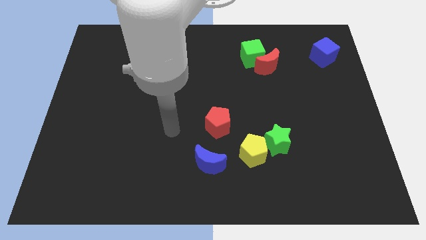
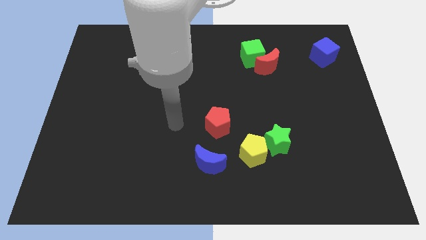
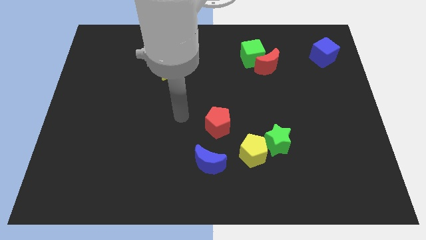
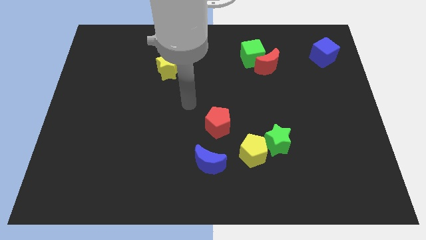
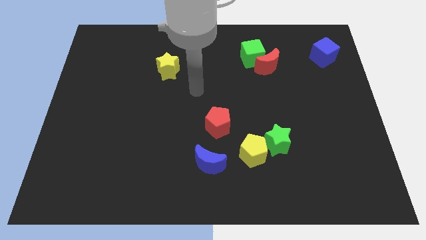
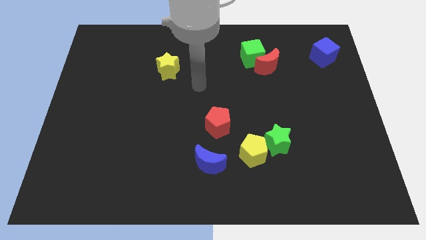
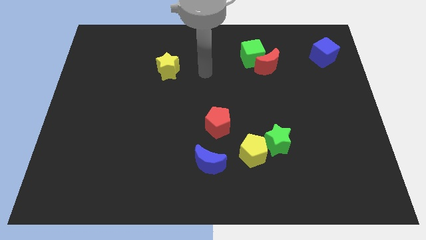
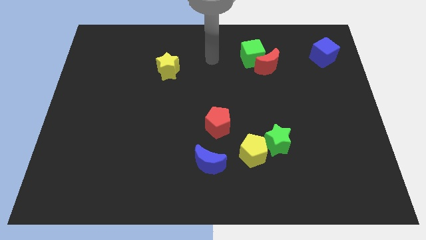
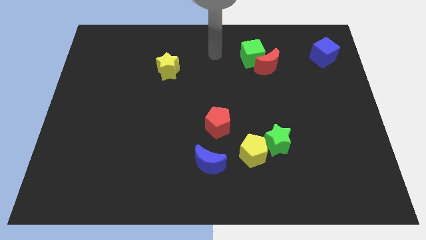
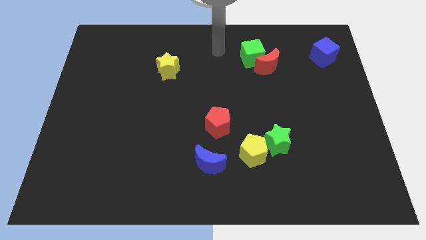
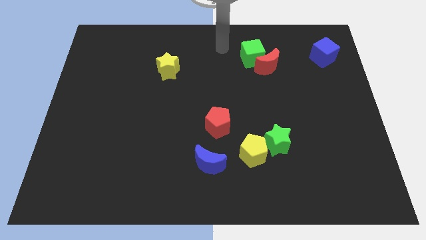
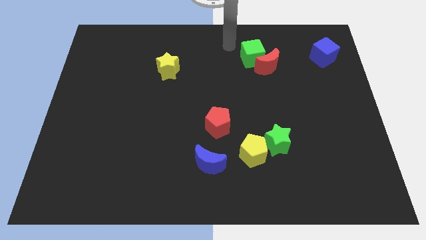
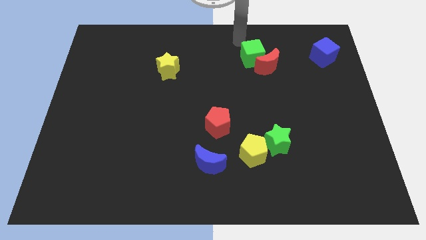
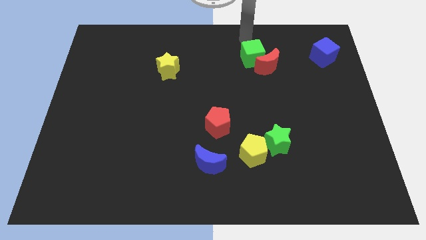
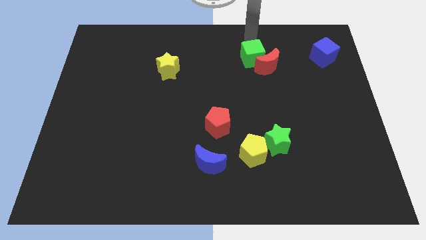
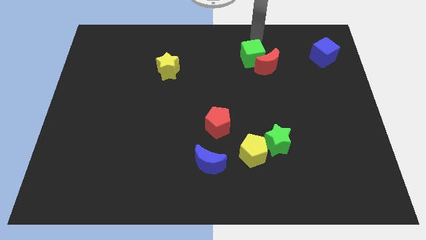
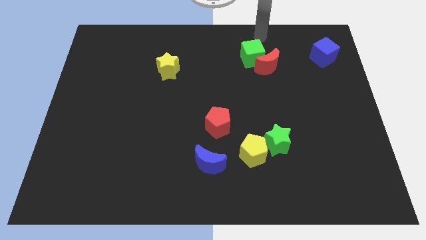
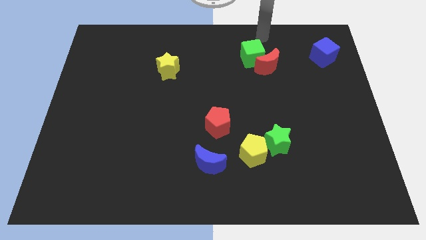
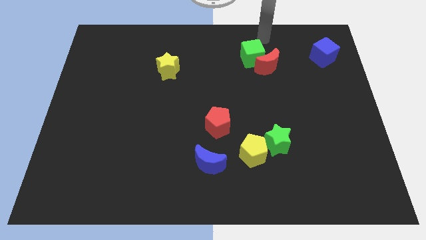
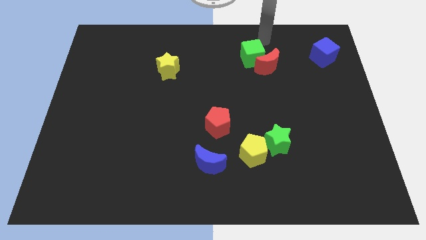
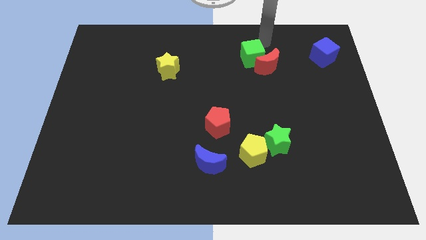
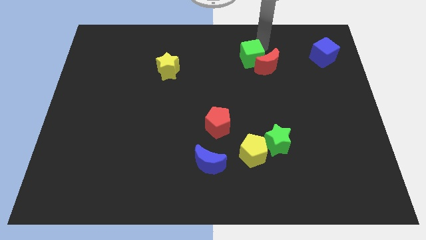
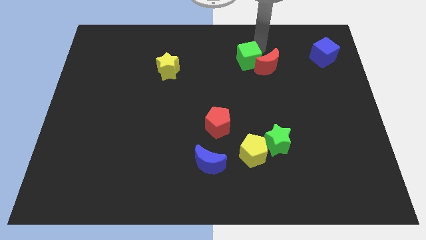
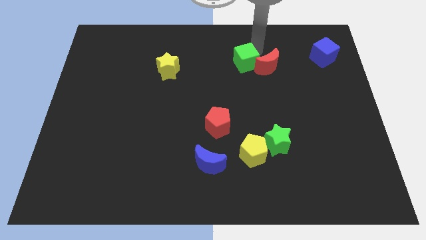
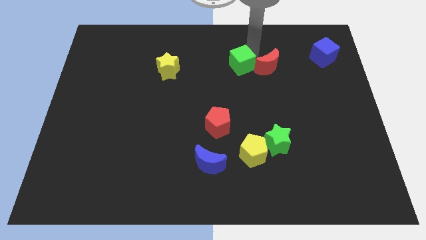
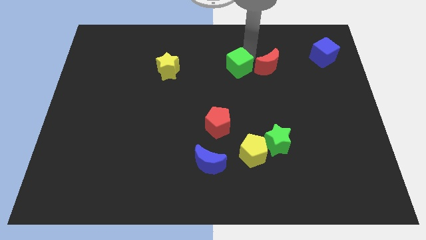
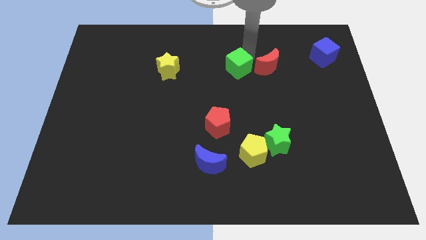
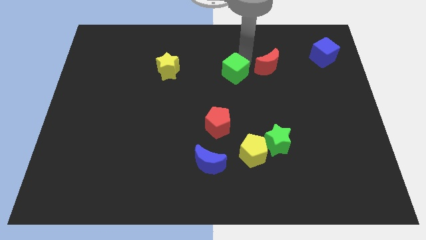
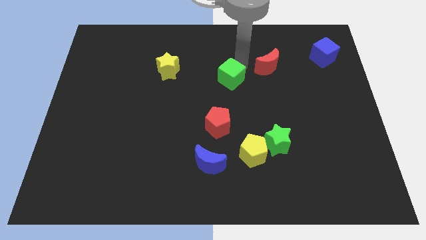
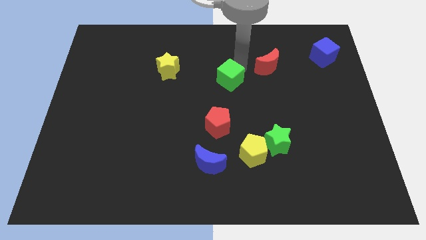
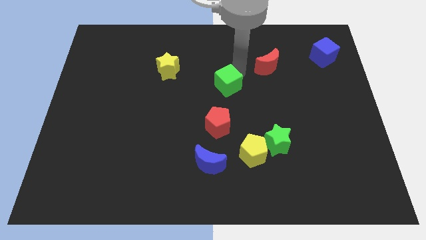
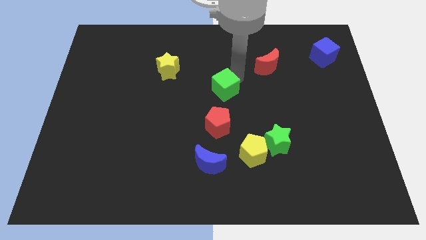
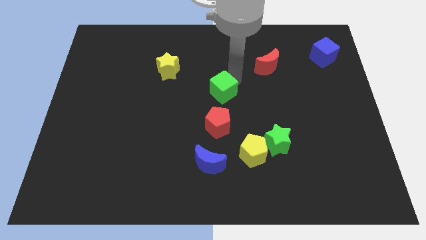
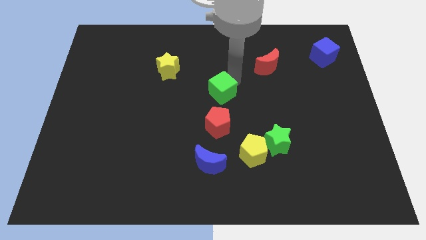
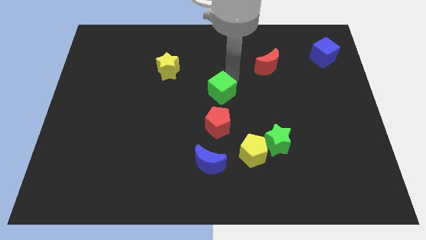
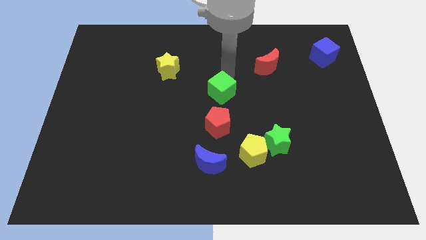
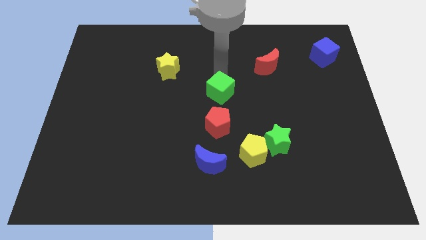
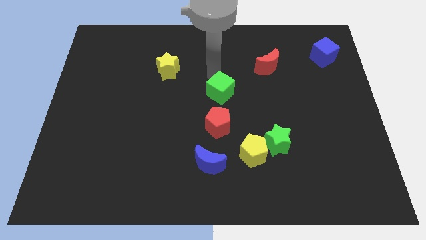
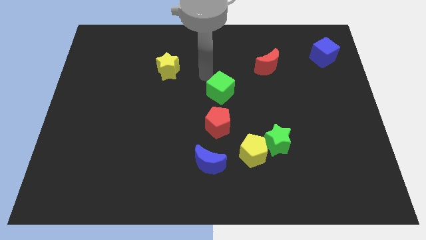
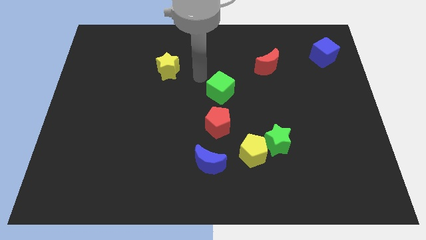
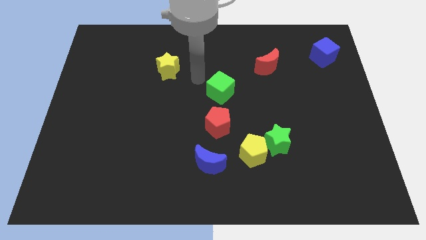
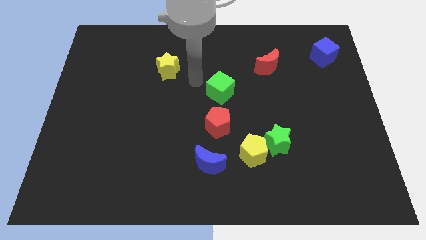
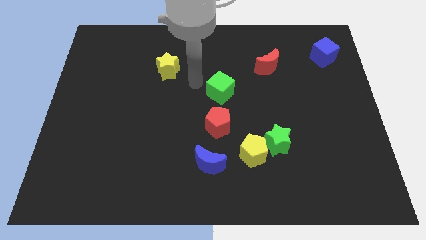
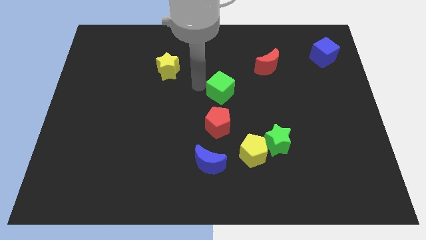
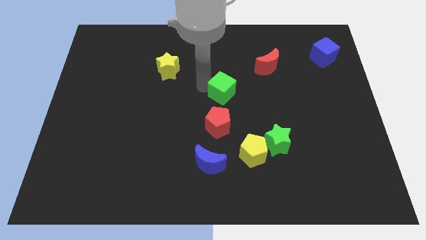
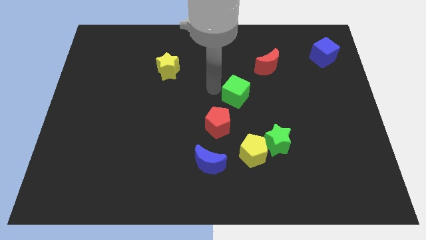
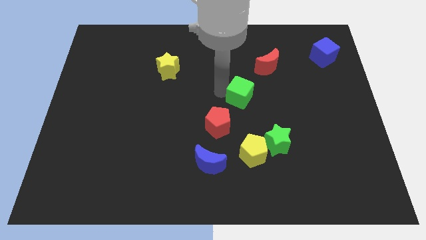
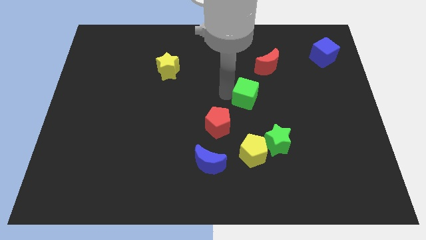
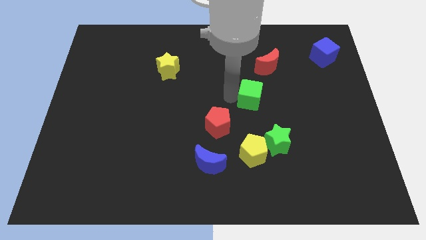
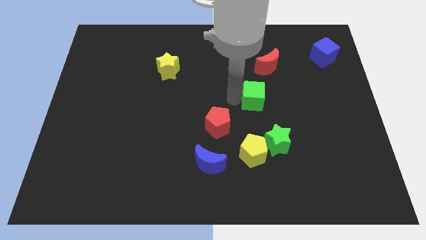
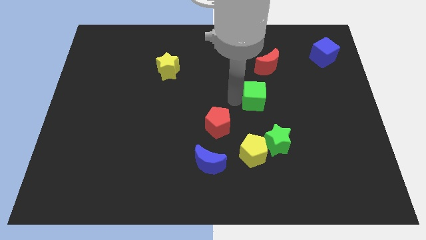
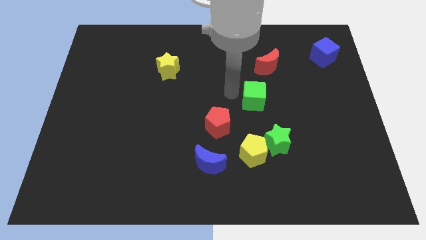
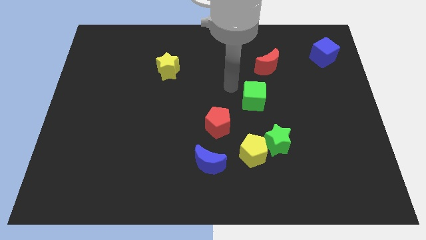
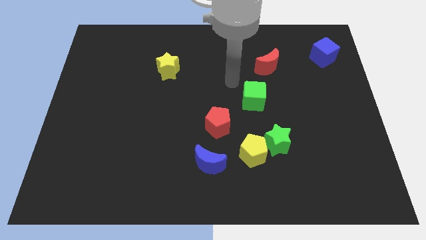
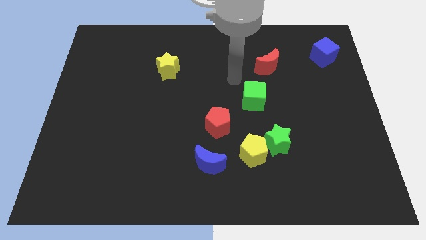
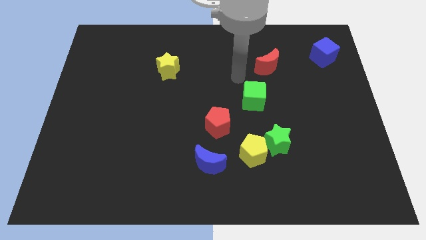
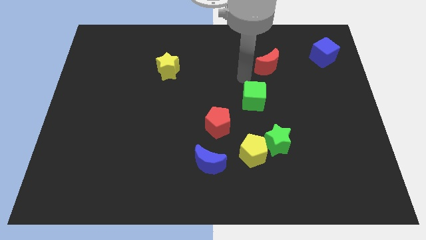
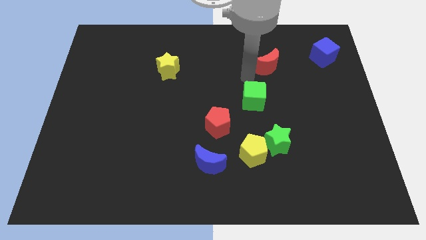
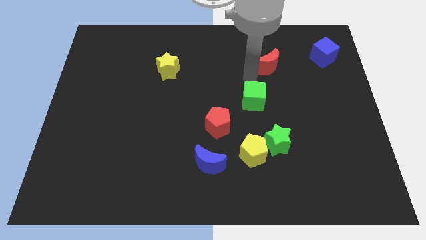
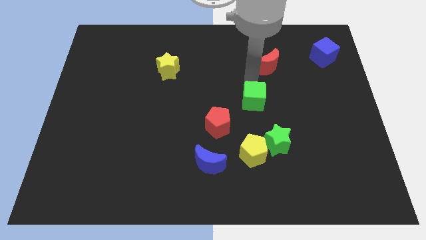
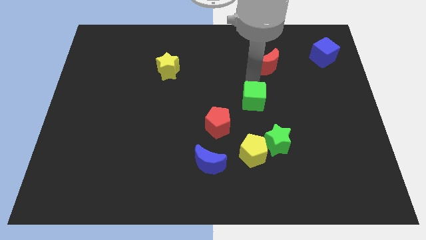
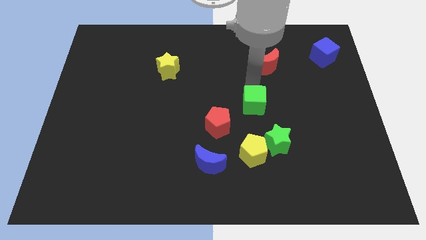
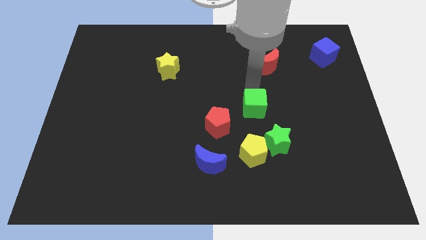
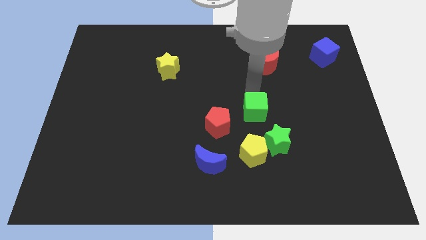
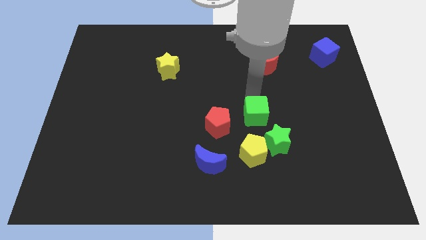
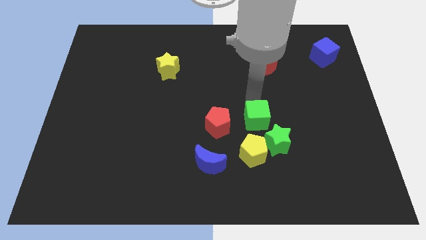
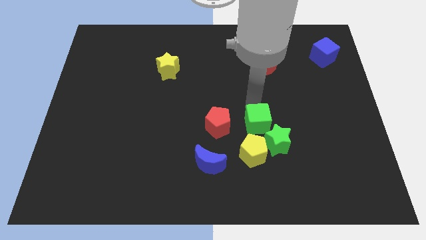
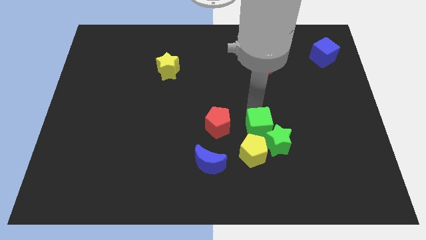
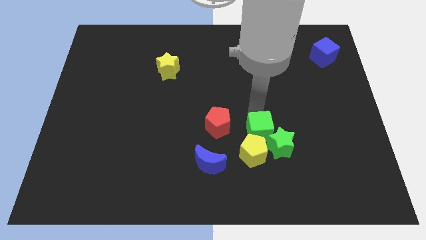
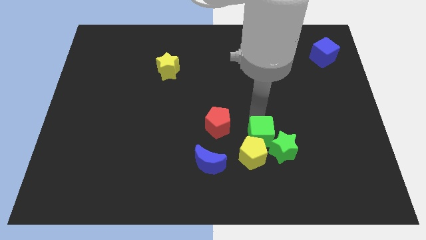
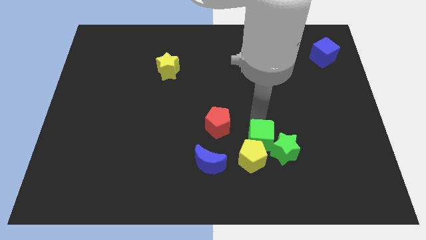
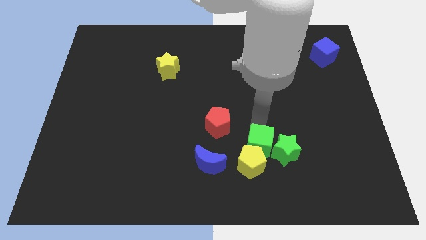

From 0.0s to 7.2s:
put the green cube to the yellow pentagon

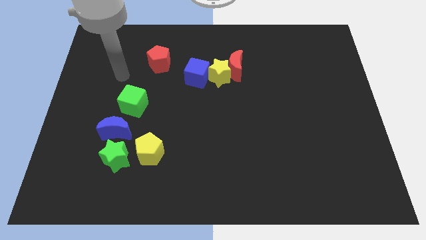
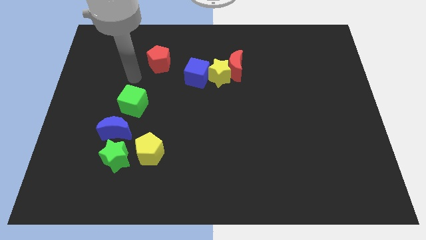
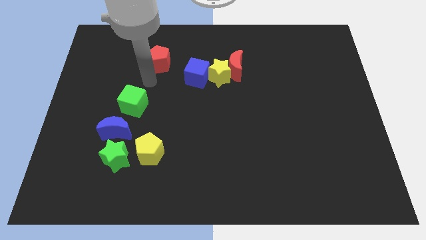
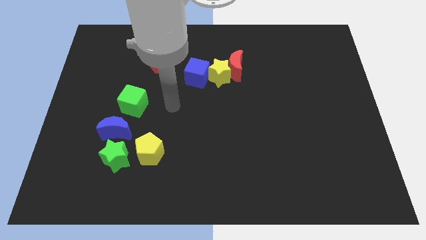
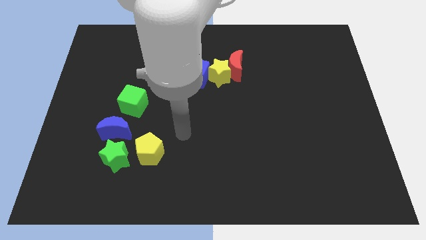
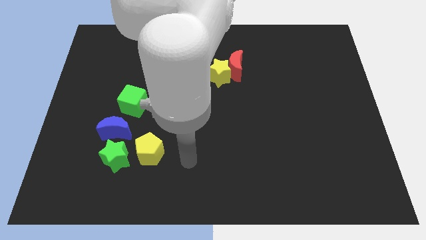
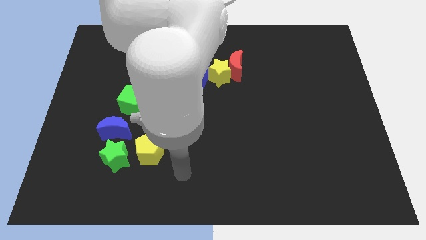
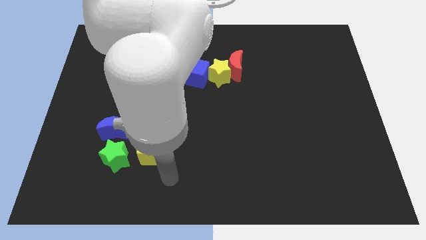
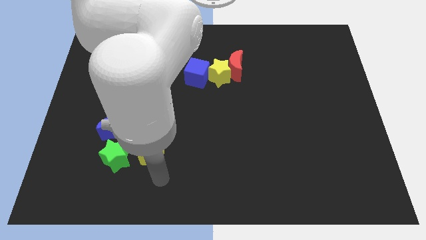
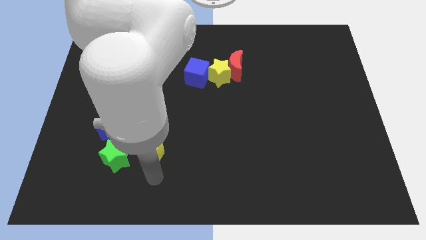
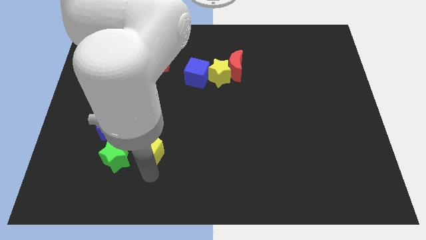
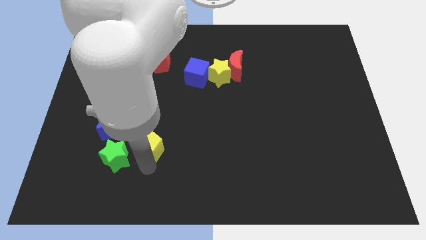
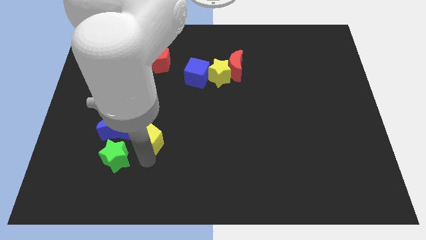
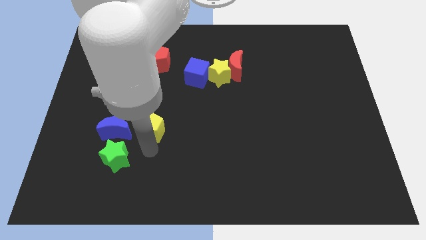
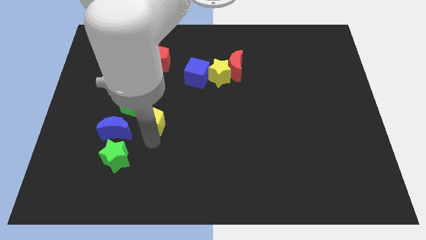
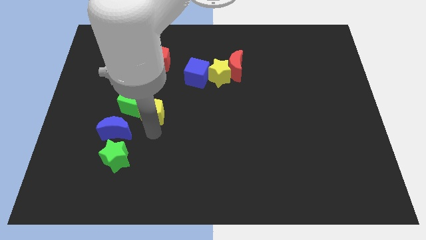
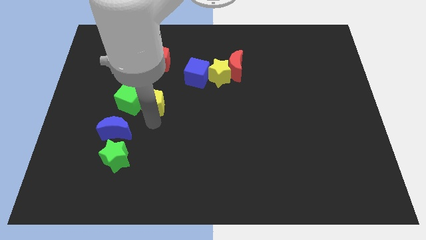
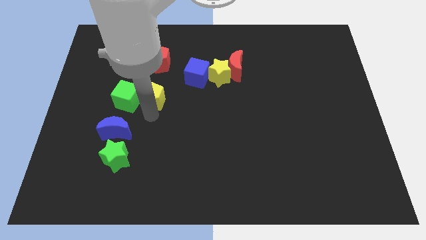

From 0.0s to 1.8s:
push the yellow pentagon towards the green cube
